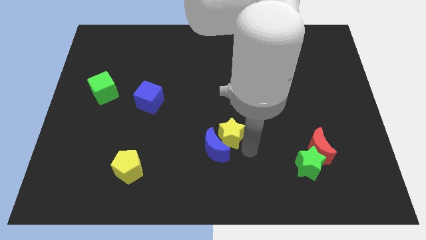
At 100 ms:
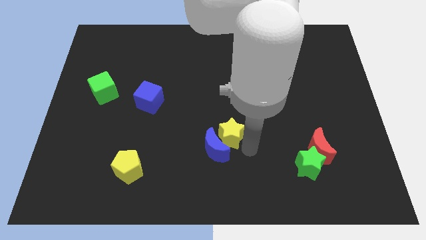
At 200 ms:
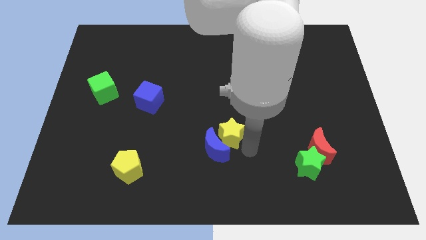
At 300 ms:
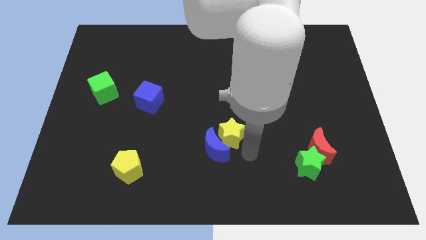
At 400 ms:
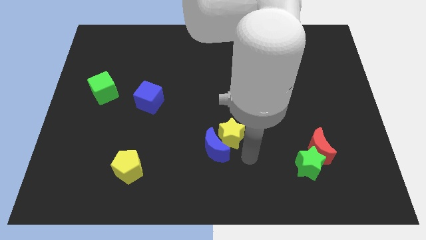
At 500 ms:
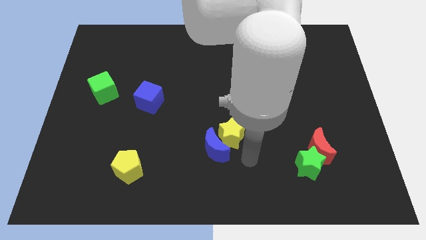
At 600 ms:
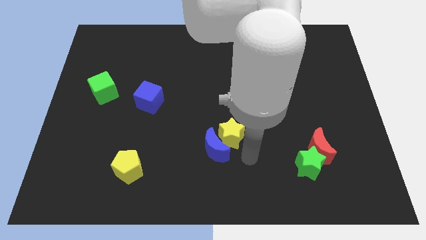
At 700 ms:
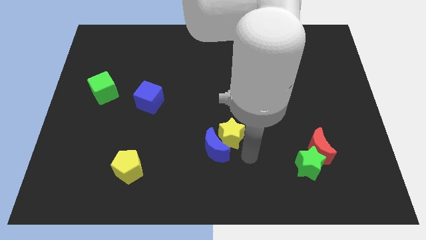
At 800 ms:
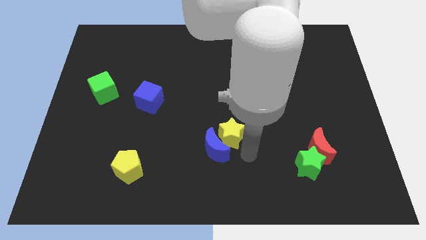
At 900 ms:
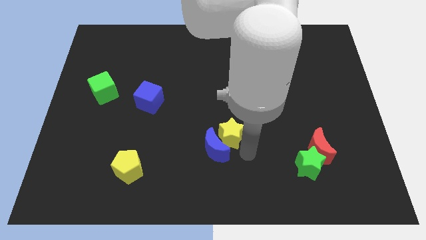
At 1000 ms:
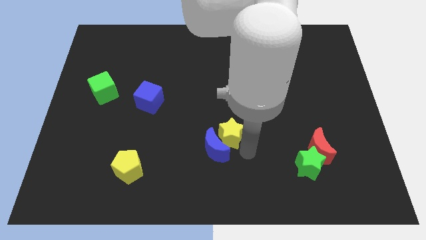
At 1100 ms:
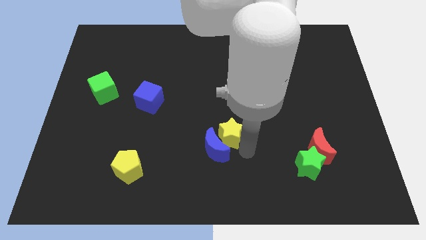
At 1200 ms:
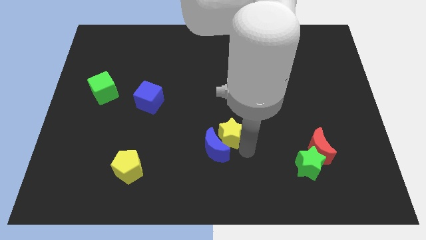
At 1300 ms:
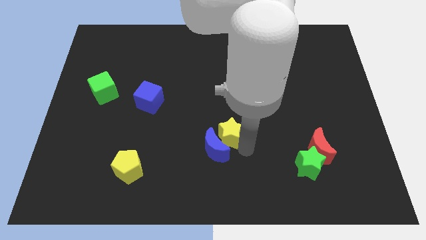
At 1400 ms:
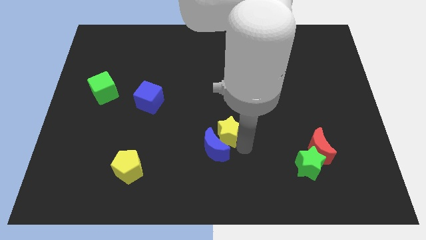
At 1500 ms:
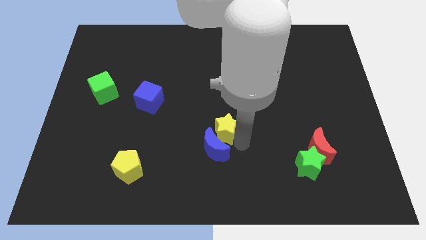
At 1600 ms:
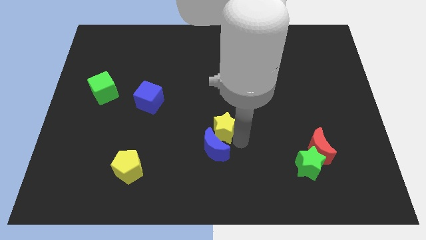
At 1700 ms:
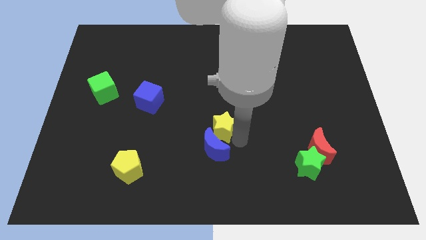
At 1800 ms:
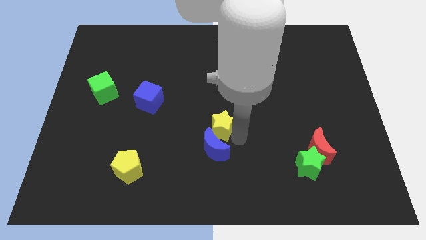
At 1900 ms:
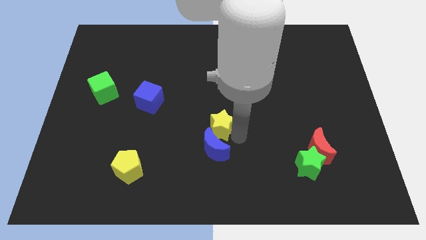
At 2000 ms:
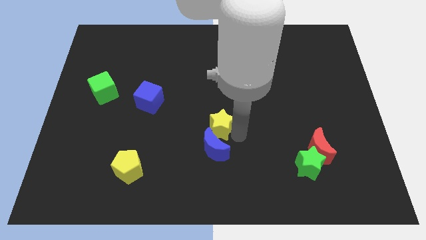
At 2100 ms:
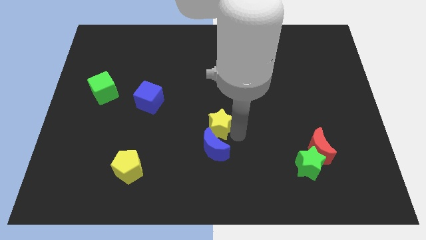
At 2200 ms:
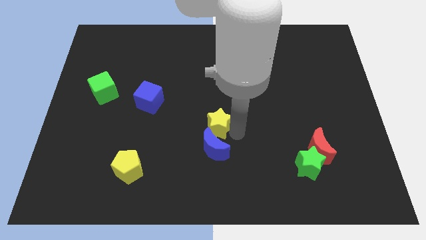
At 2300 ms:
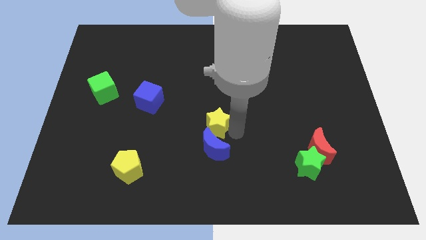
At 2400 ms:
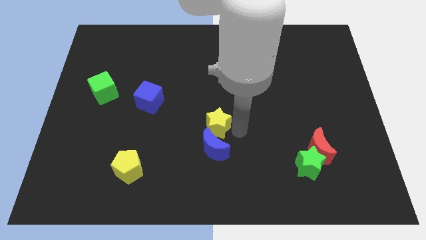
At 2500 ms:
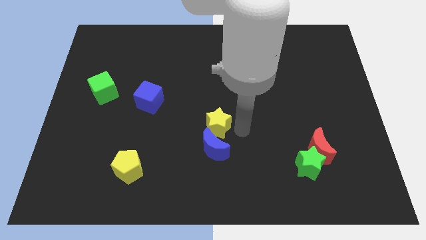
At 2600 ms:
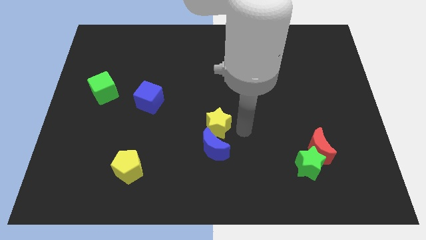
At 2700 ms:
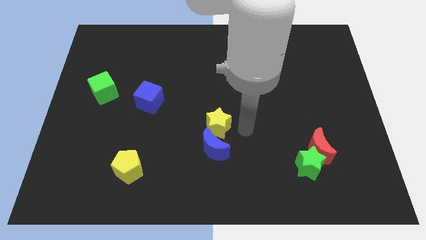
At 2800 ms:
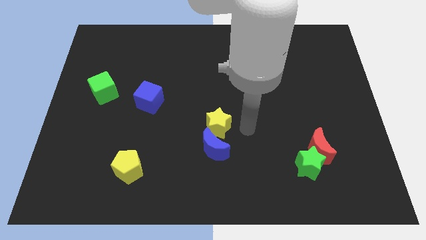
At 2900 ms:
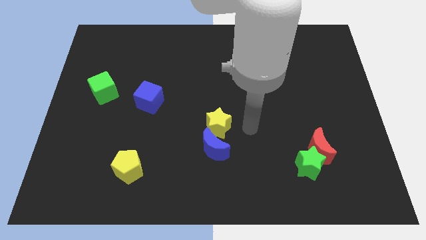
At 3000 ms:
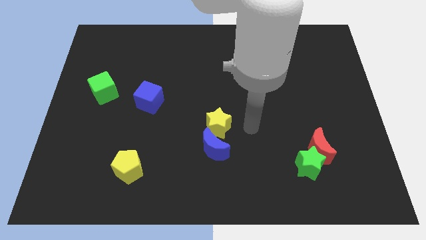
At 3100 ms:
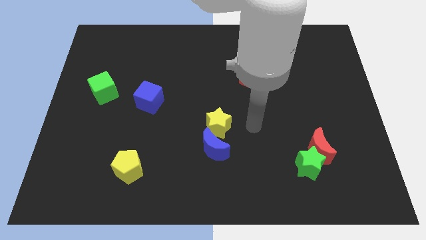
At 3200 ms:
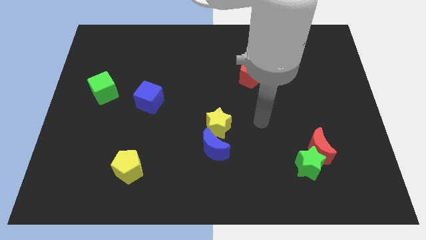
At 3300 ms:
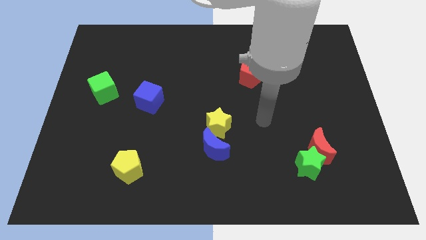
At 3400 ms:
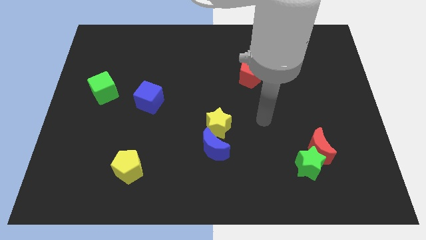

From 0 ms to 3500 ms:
slight push the yellow star at the top of blue crescent

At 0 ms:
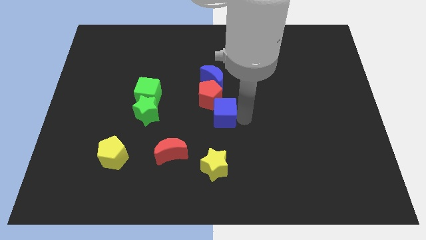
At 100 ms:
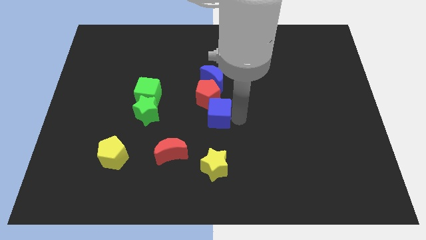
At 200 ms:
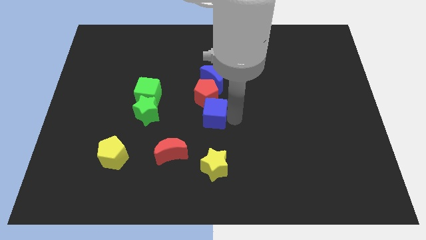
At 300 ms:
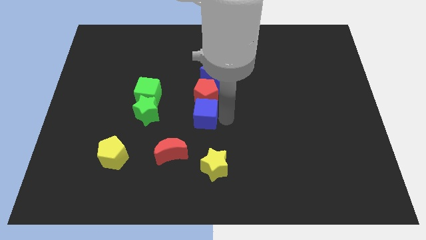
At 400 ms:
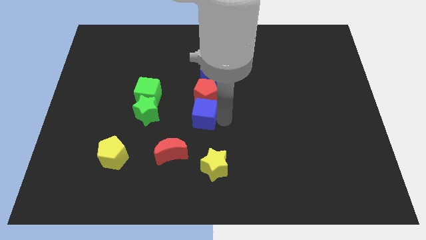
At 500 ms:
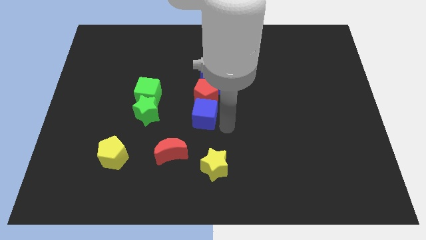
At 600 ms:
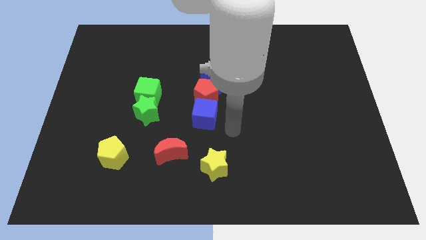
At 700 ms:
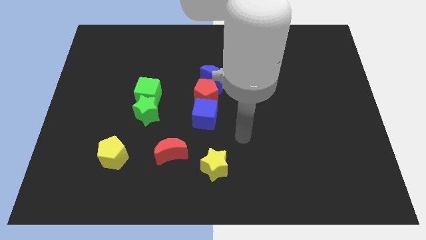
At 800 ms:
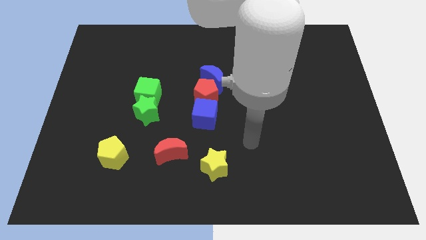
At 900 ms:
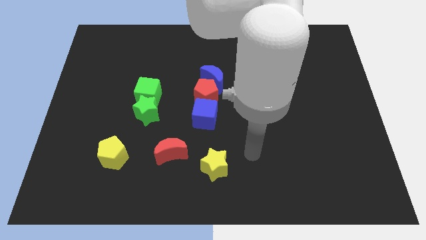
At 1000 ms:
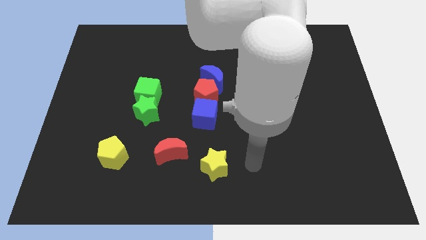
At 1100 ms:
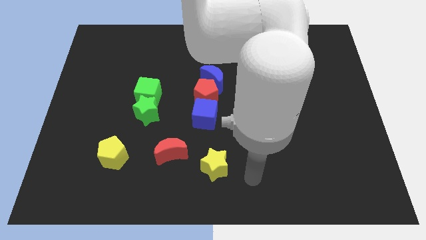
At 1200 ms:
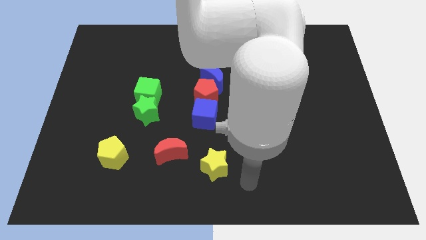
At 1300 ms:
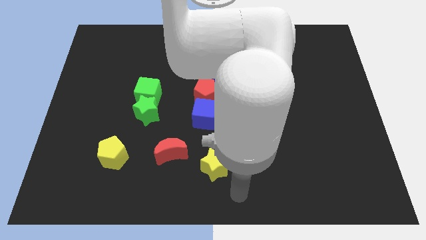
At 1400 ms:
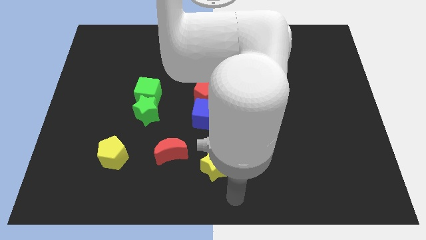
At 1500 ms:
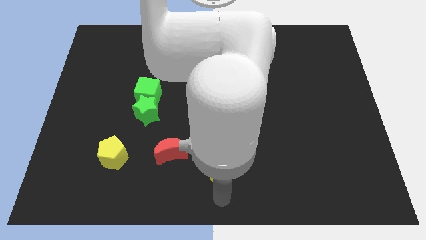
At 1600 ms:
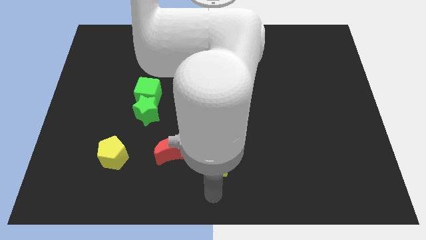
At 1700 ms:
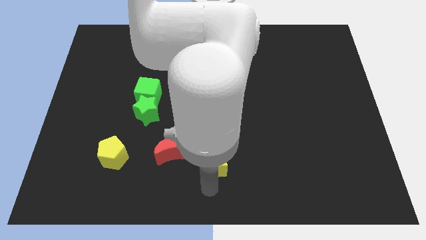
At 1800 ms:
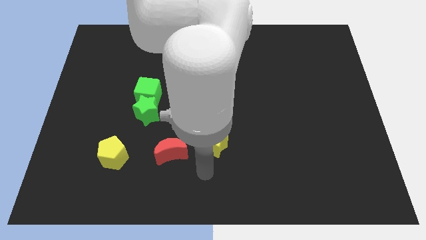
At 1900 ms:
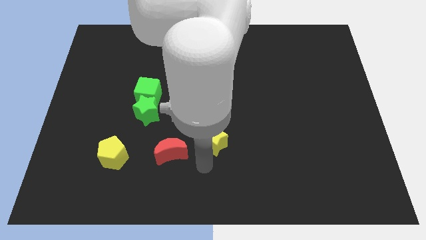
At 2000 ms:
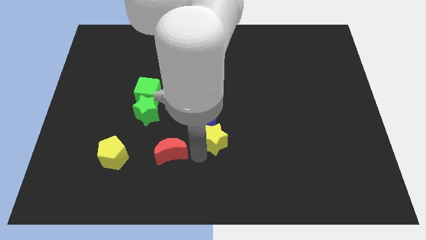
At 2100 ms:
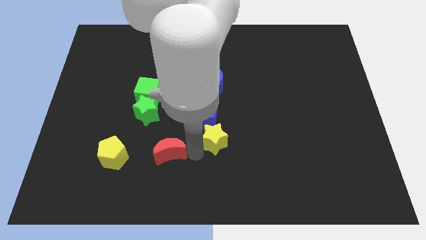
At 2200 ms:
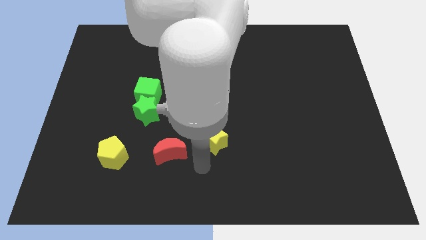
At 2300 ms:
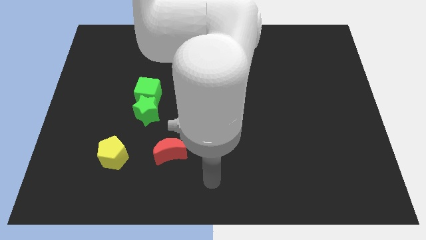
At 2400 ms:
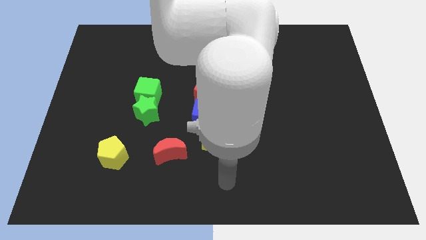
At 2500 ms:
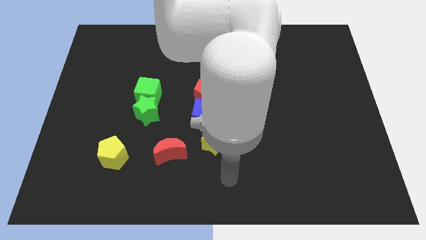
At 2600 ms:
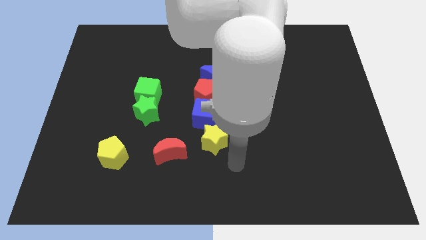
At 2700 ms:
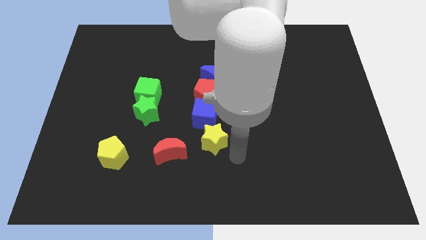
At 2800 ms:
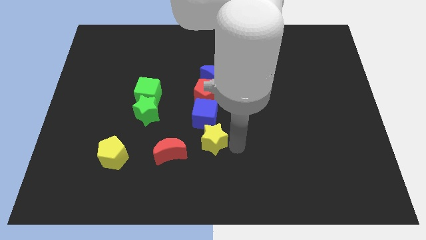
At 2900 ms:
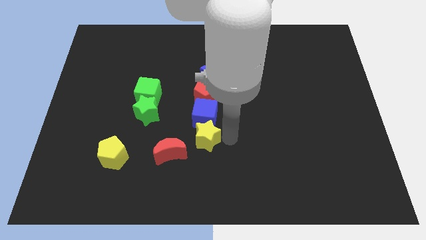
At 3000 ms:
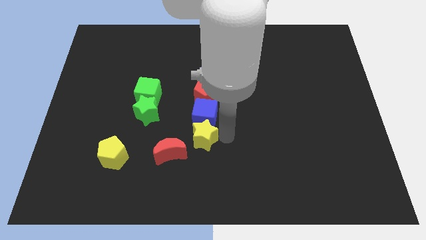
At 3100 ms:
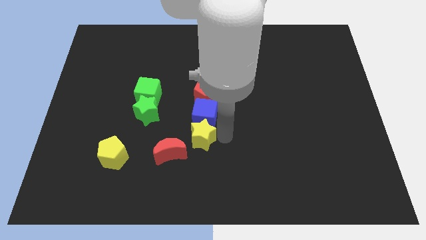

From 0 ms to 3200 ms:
push yellow star into blue cube

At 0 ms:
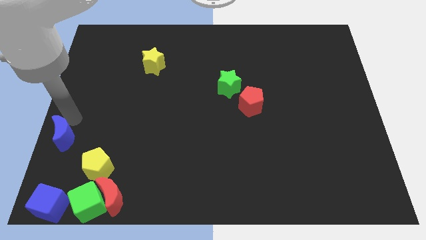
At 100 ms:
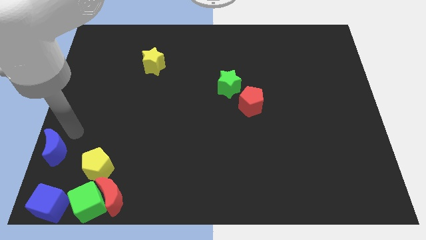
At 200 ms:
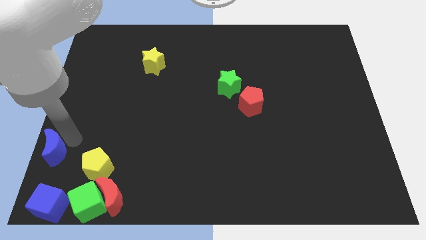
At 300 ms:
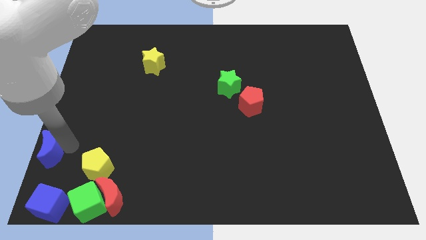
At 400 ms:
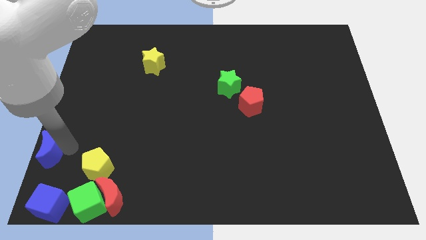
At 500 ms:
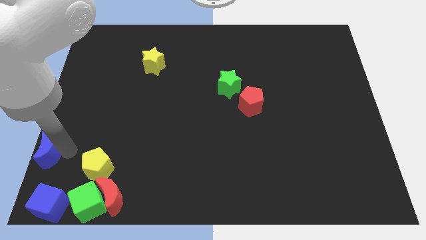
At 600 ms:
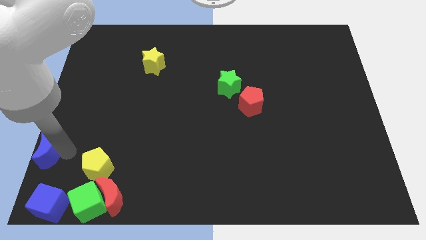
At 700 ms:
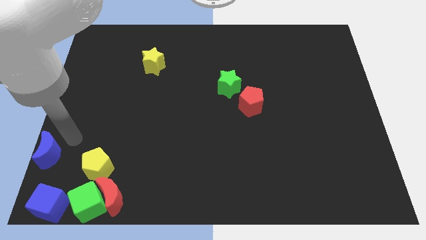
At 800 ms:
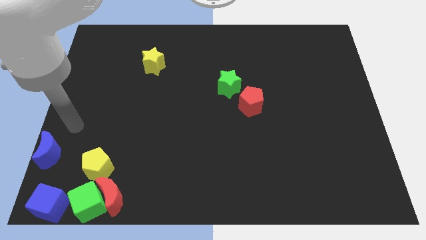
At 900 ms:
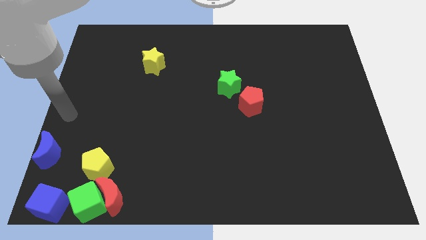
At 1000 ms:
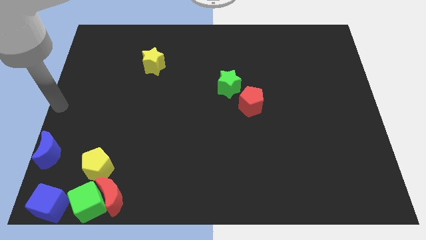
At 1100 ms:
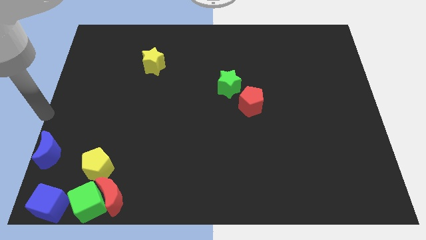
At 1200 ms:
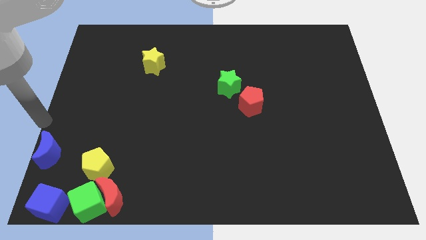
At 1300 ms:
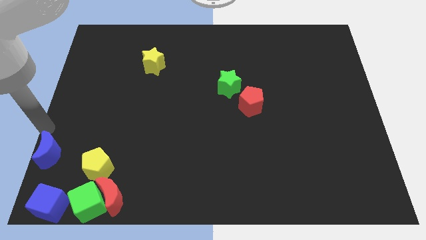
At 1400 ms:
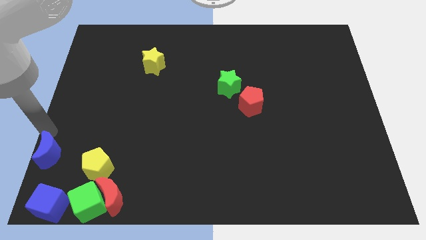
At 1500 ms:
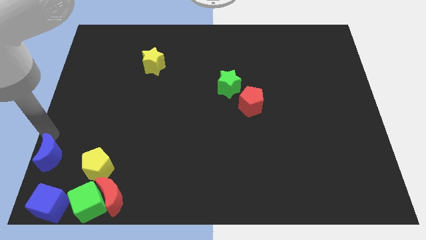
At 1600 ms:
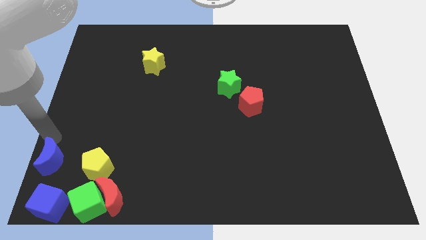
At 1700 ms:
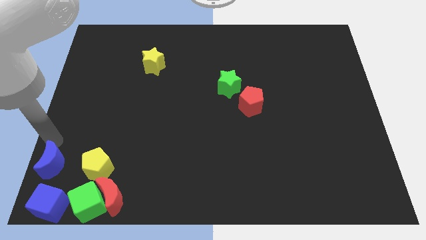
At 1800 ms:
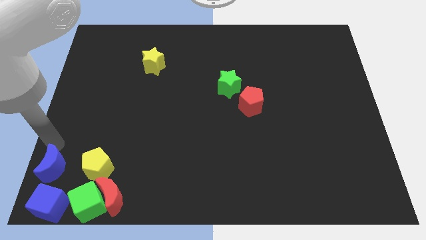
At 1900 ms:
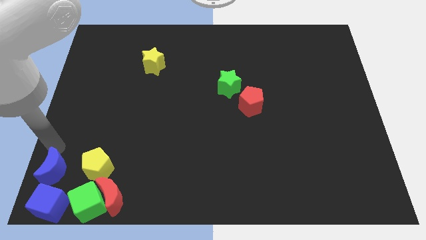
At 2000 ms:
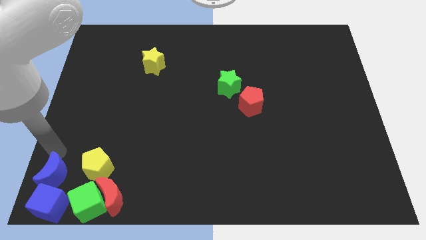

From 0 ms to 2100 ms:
place the blue moon at the bottom left corner

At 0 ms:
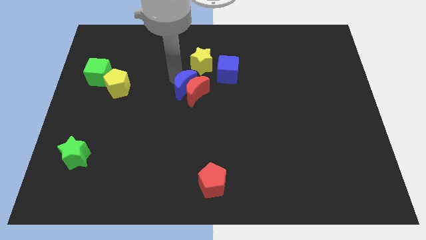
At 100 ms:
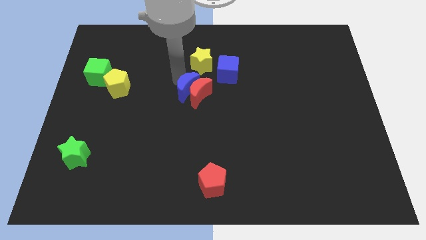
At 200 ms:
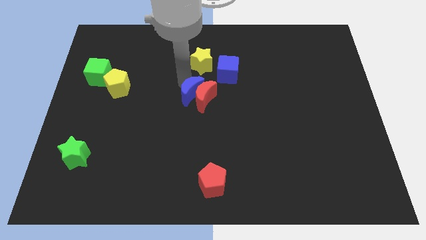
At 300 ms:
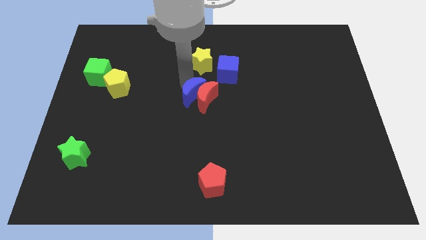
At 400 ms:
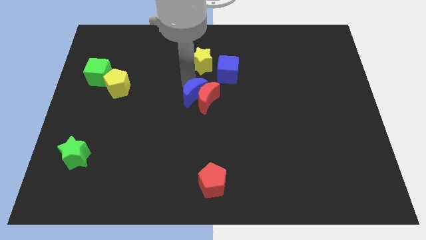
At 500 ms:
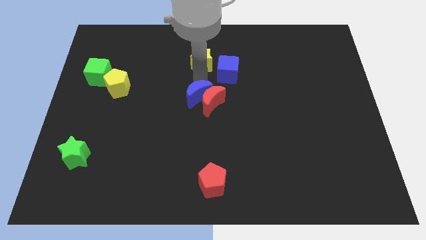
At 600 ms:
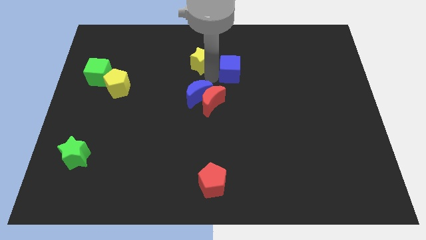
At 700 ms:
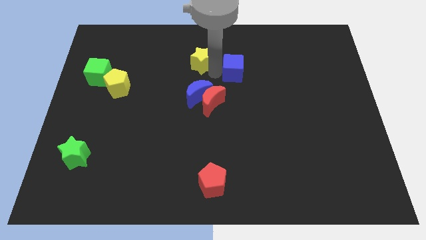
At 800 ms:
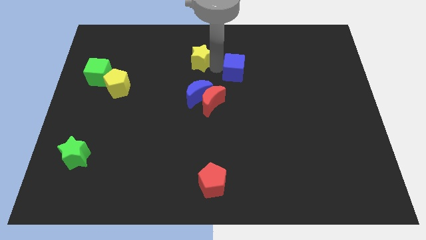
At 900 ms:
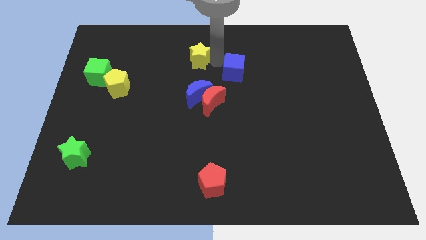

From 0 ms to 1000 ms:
point you arm between yellow star and blue cube